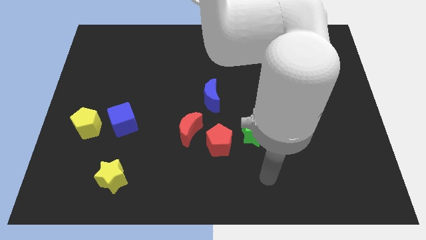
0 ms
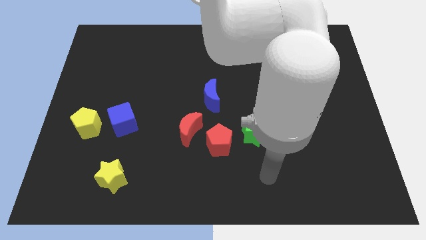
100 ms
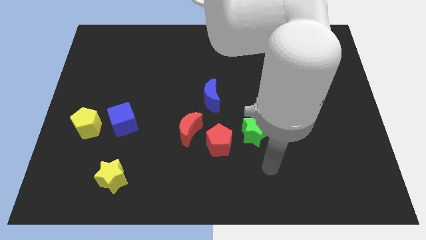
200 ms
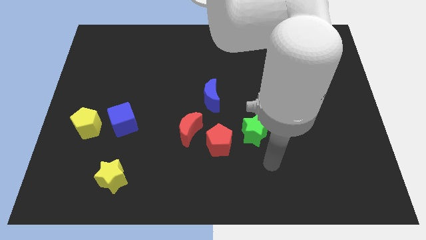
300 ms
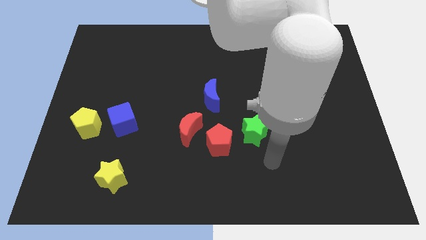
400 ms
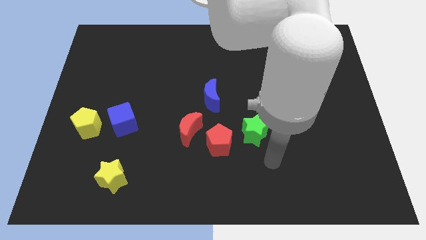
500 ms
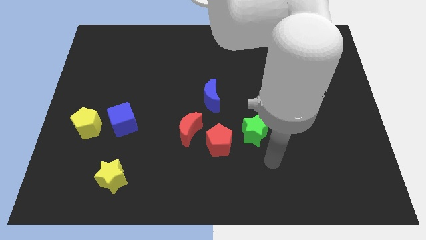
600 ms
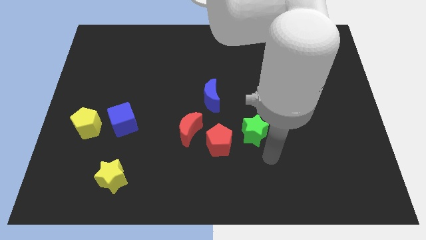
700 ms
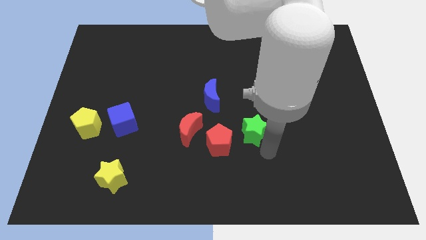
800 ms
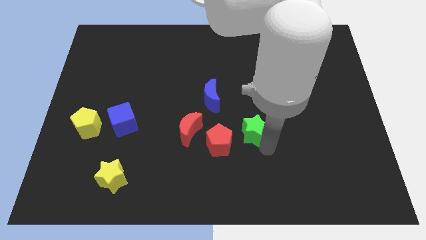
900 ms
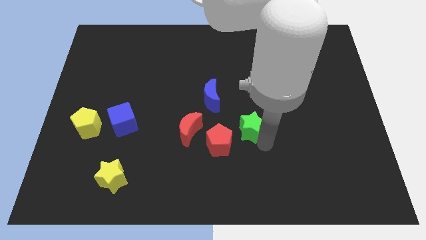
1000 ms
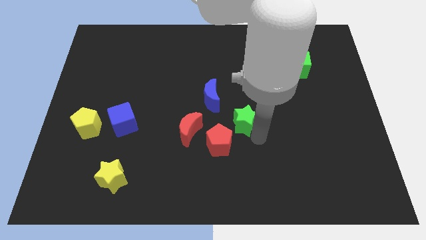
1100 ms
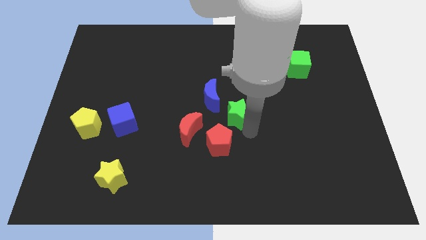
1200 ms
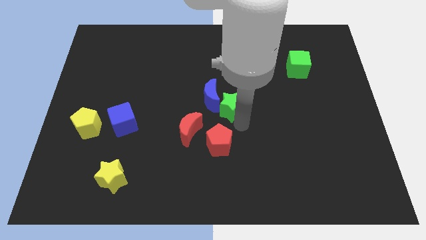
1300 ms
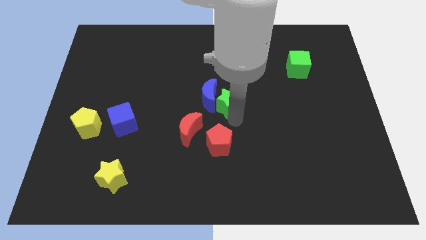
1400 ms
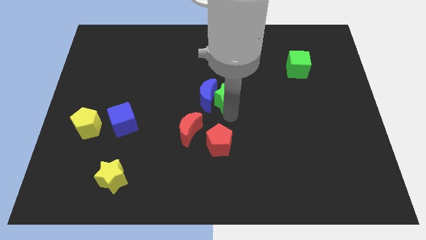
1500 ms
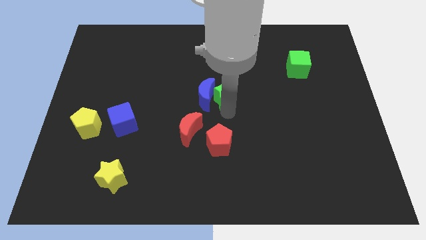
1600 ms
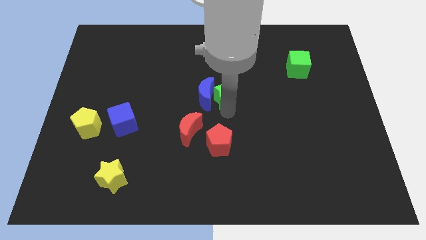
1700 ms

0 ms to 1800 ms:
slide the green star into the right side of the blue moon

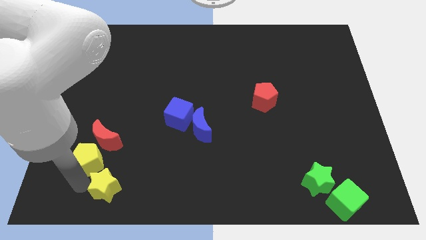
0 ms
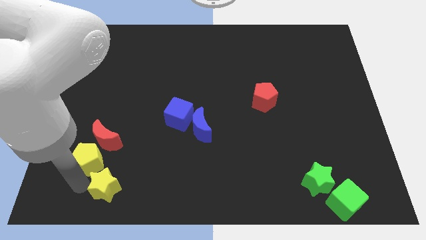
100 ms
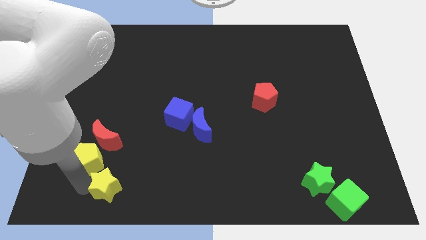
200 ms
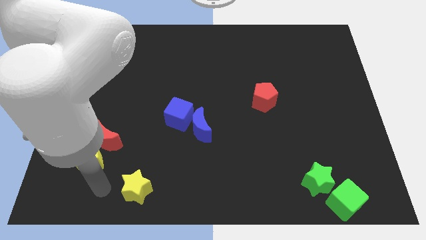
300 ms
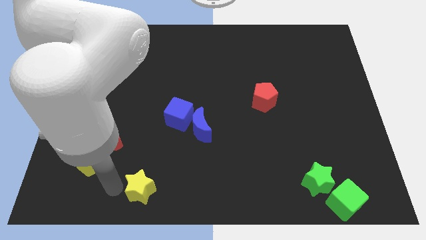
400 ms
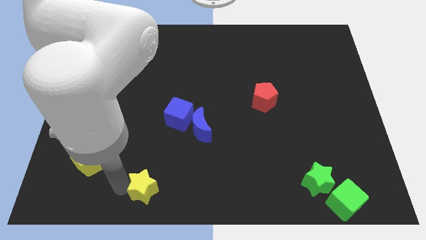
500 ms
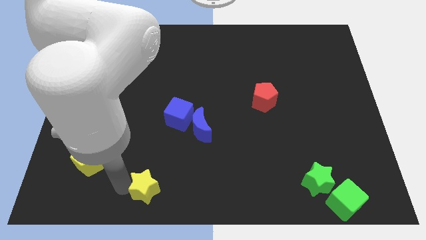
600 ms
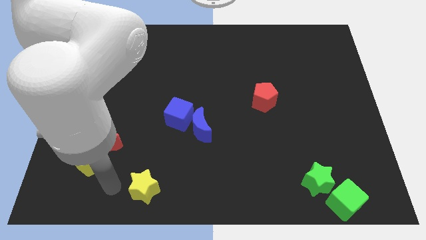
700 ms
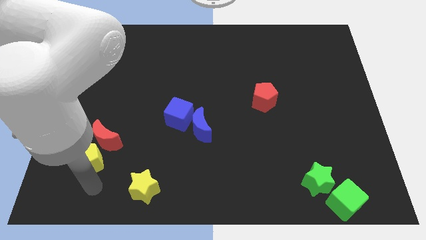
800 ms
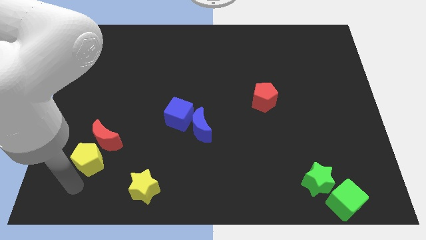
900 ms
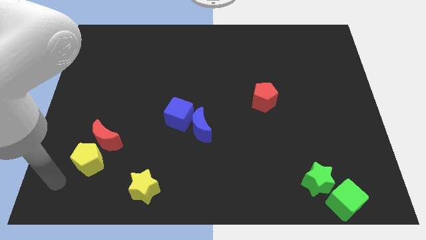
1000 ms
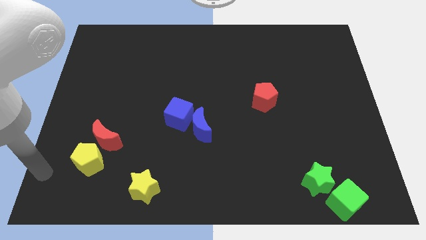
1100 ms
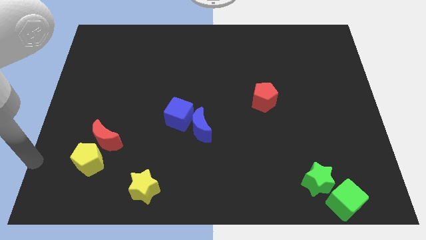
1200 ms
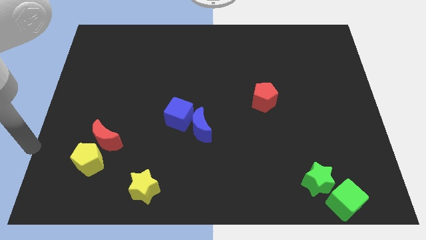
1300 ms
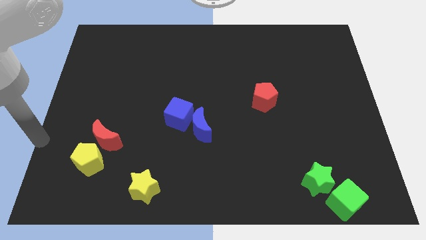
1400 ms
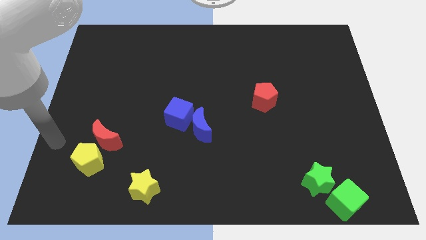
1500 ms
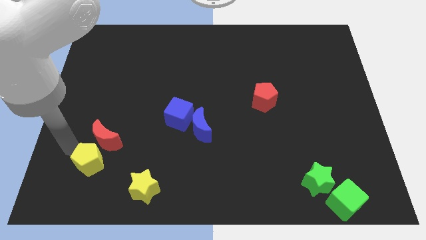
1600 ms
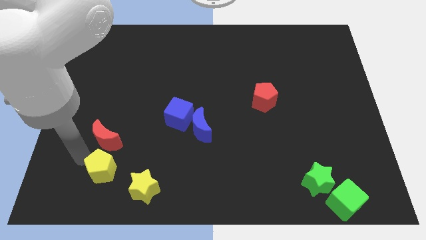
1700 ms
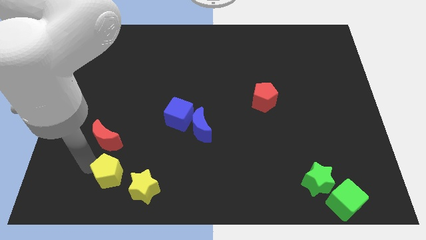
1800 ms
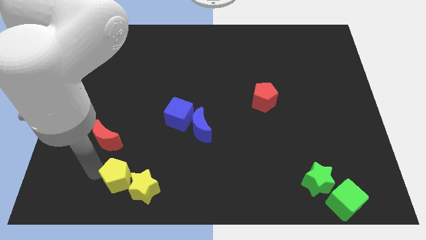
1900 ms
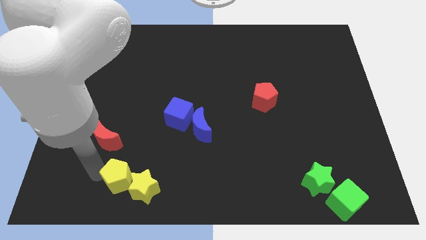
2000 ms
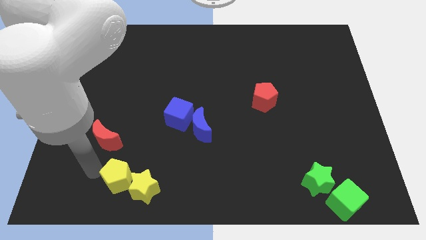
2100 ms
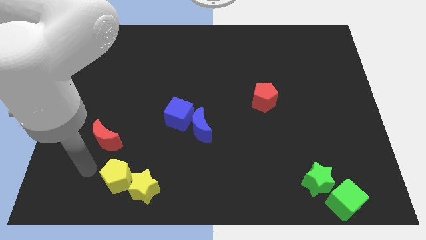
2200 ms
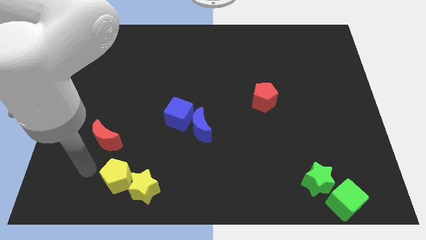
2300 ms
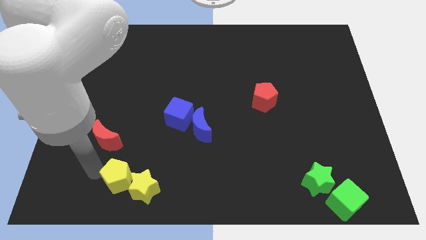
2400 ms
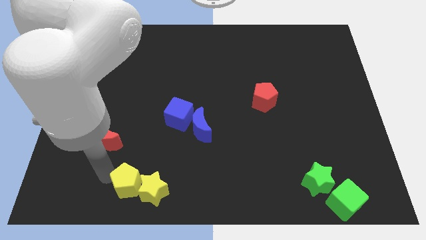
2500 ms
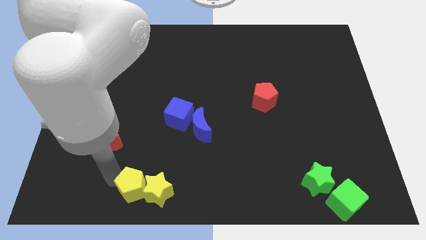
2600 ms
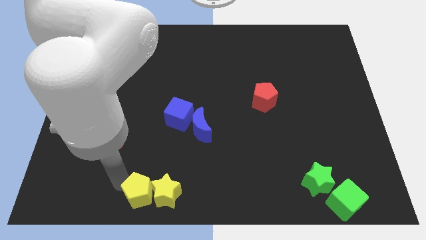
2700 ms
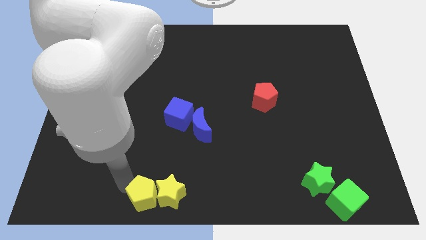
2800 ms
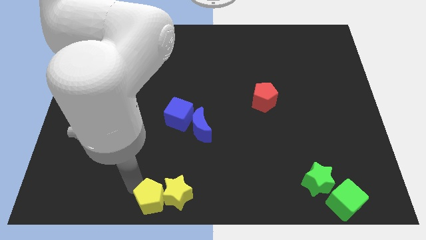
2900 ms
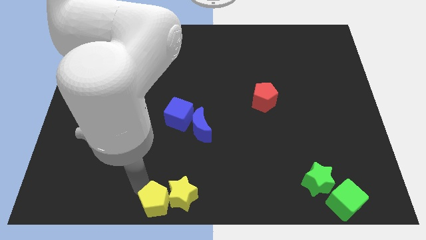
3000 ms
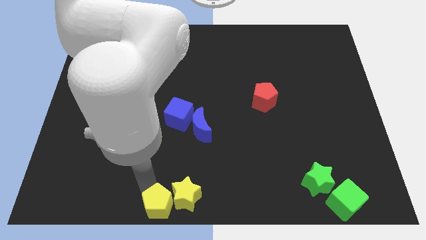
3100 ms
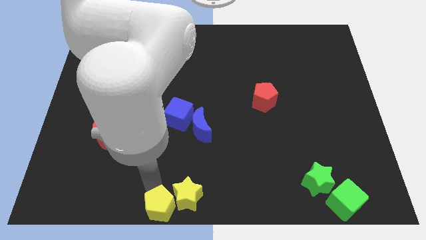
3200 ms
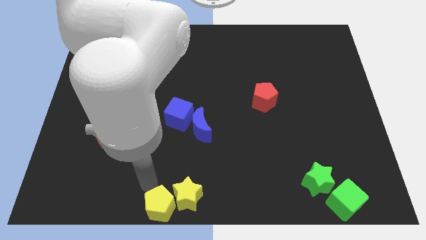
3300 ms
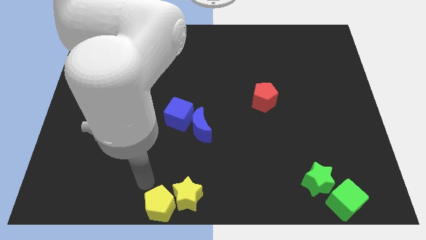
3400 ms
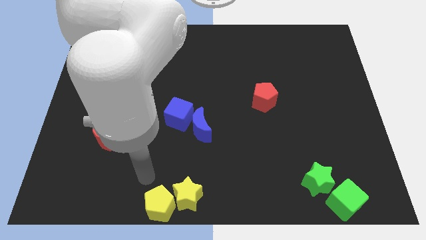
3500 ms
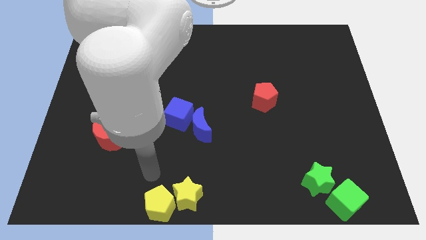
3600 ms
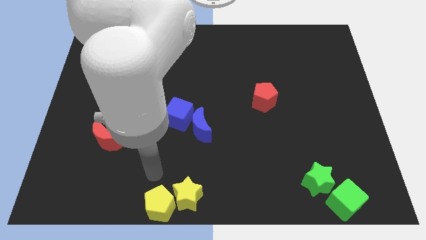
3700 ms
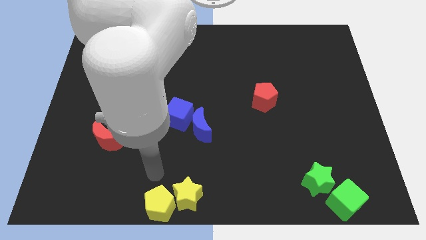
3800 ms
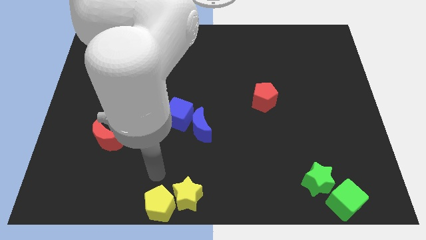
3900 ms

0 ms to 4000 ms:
place the yellow things underneath the blue objects

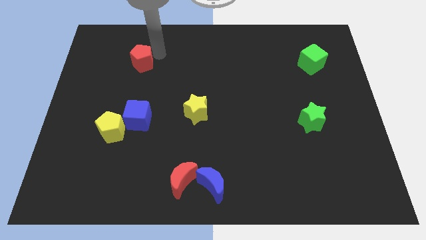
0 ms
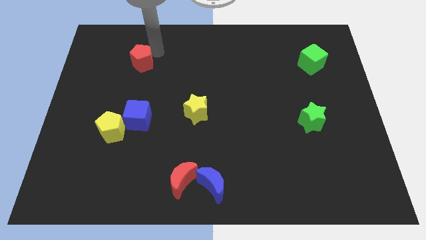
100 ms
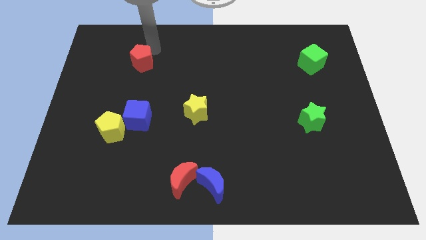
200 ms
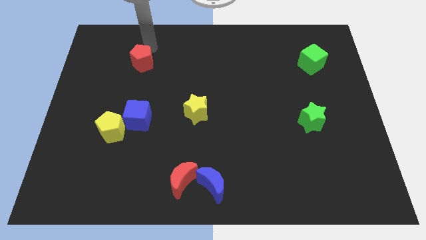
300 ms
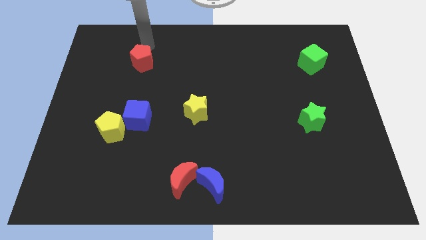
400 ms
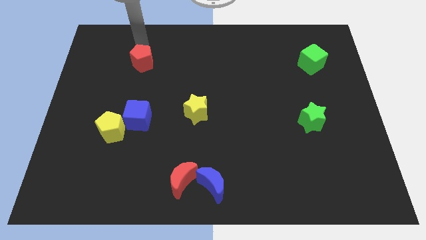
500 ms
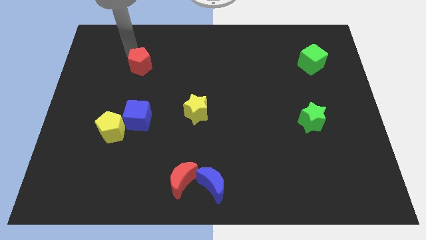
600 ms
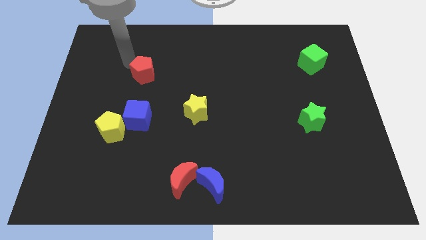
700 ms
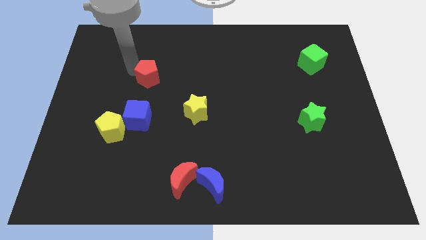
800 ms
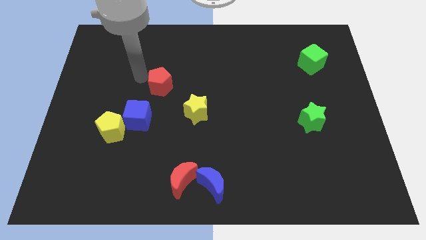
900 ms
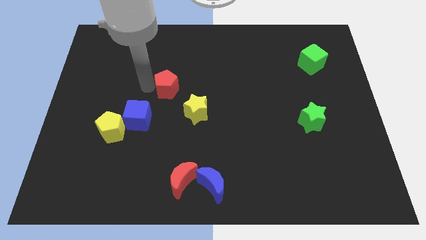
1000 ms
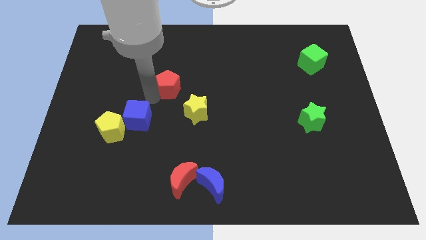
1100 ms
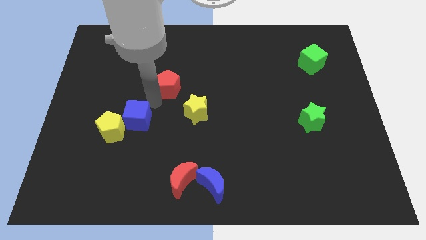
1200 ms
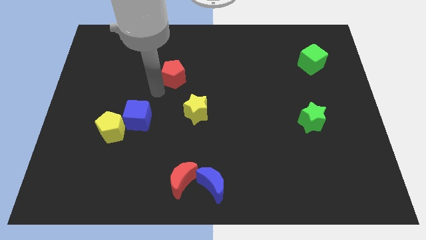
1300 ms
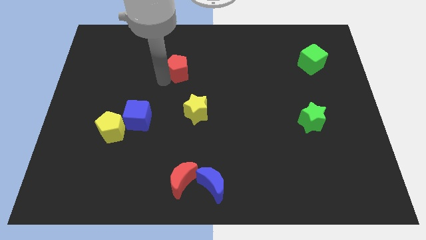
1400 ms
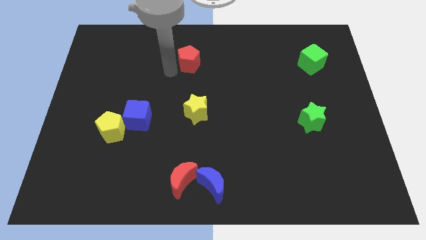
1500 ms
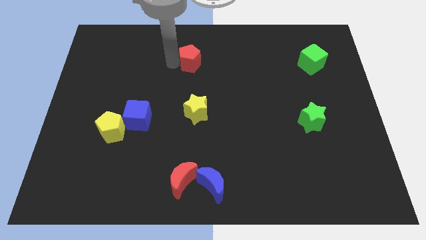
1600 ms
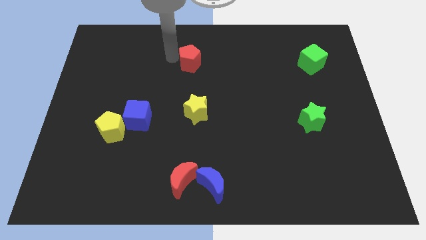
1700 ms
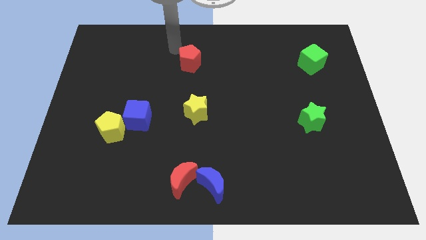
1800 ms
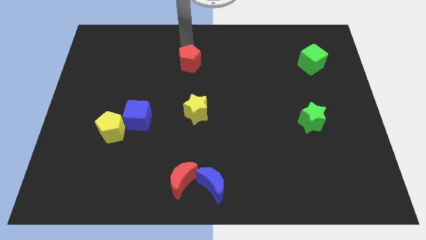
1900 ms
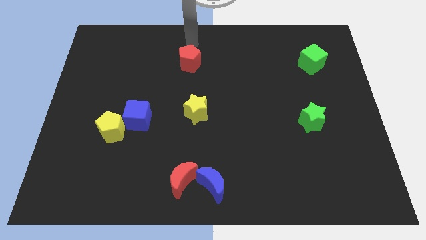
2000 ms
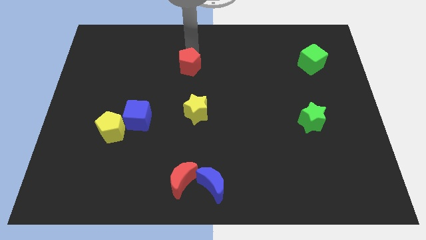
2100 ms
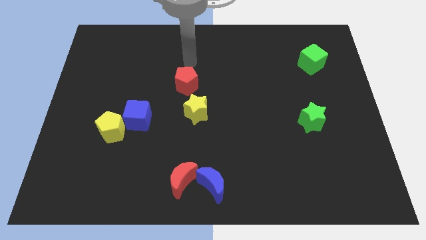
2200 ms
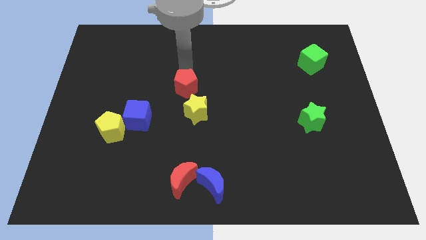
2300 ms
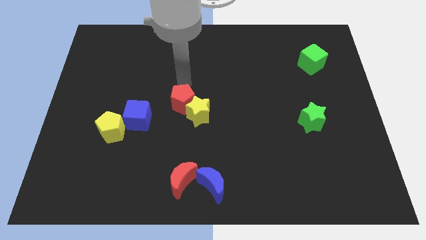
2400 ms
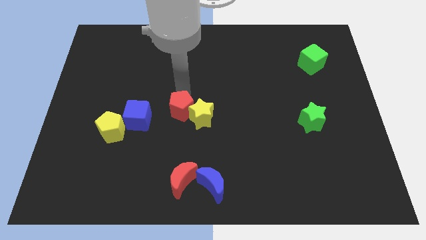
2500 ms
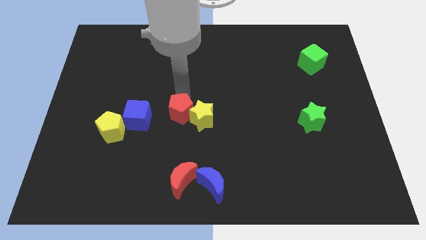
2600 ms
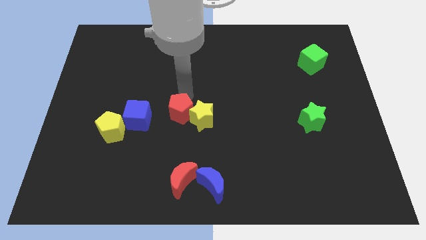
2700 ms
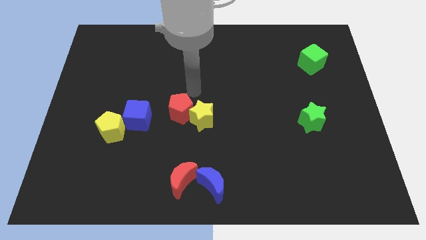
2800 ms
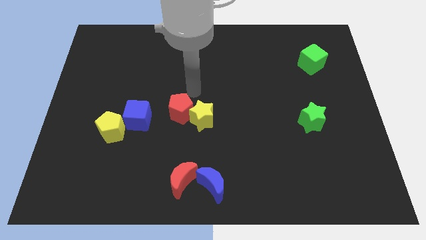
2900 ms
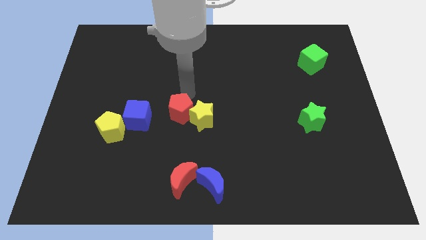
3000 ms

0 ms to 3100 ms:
push the red pentagon into the yellow star
